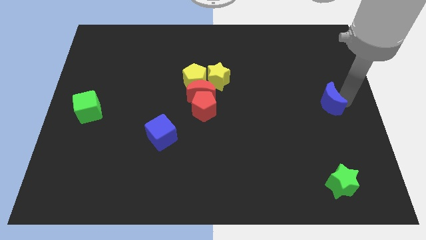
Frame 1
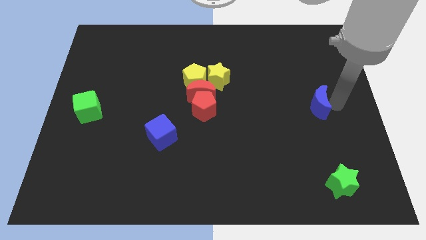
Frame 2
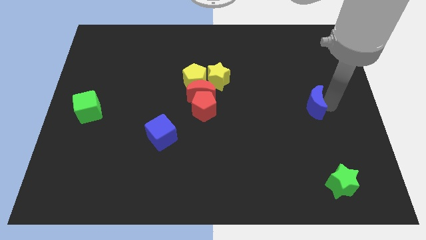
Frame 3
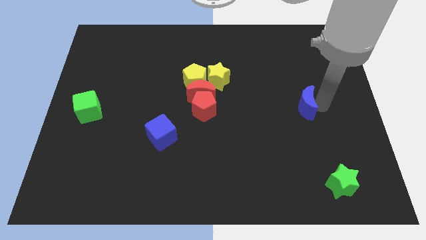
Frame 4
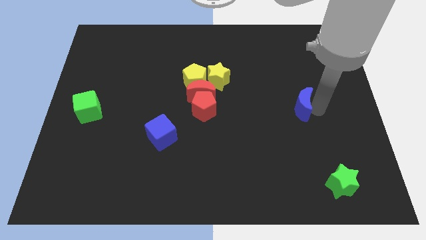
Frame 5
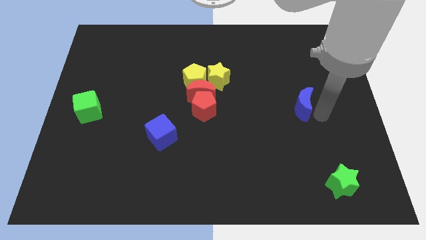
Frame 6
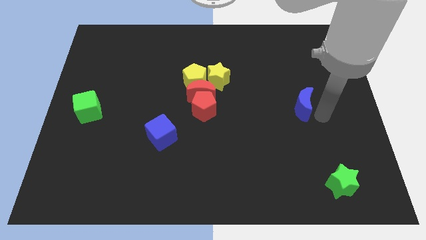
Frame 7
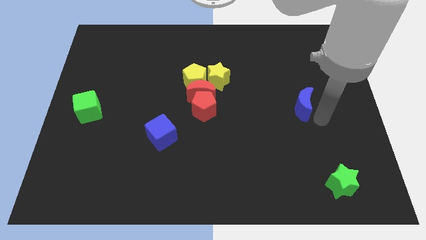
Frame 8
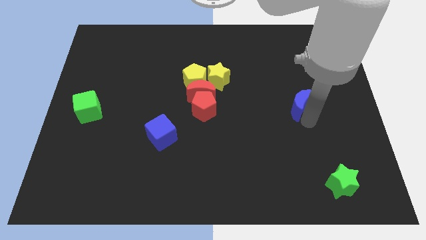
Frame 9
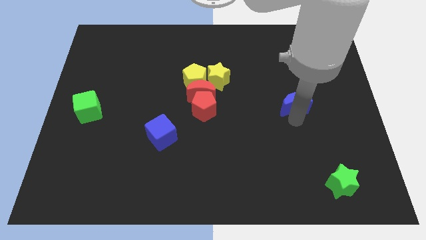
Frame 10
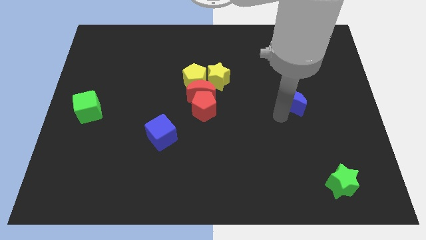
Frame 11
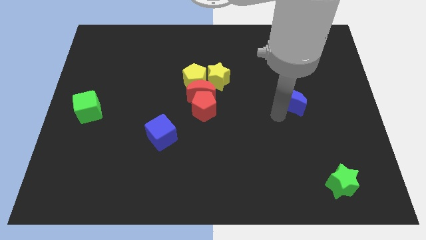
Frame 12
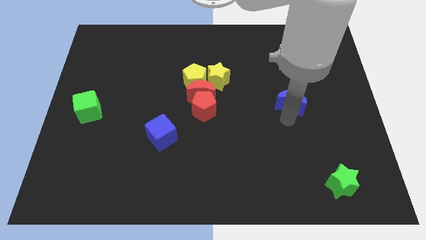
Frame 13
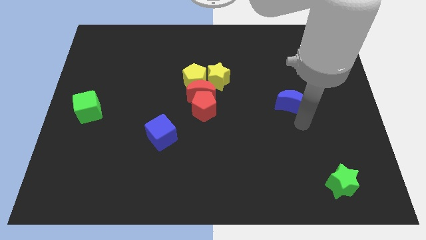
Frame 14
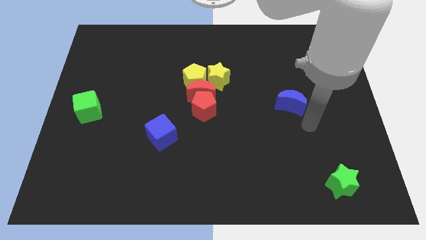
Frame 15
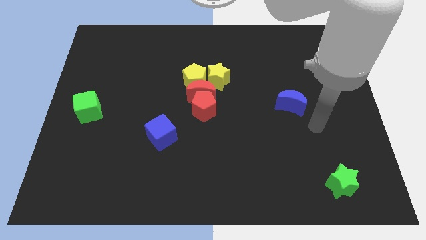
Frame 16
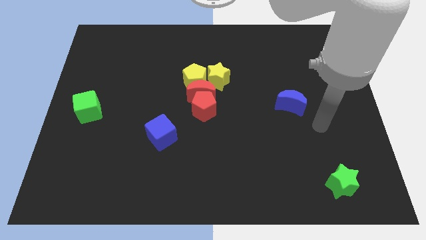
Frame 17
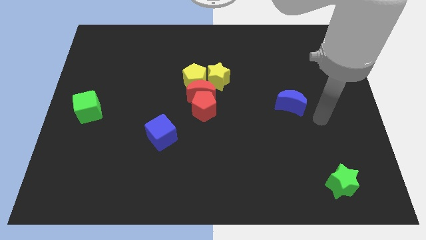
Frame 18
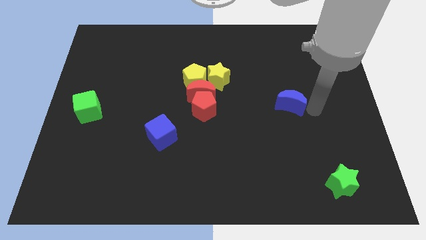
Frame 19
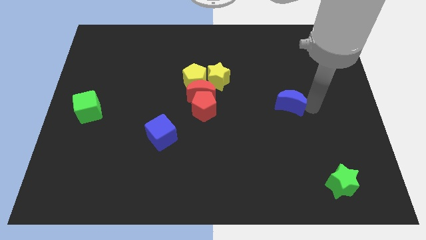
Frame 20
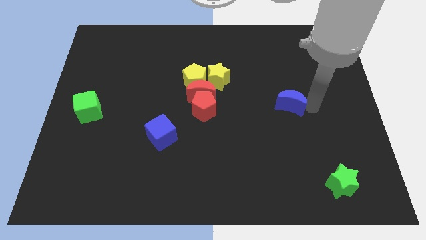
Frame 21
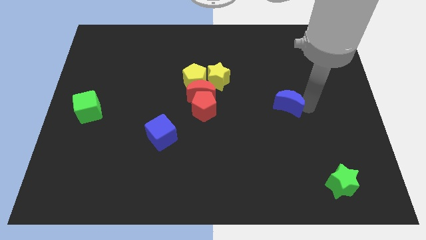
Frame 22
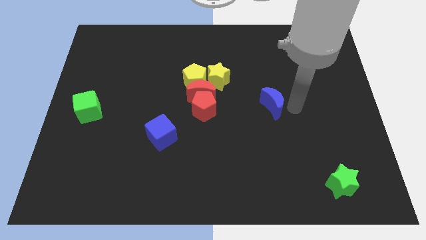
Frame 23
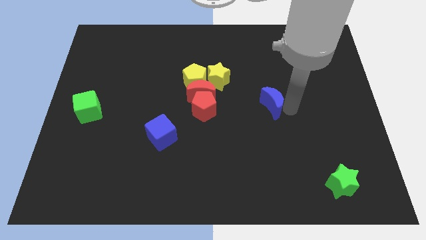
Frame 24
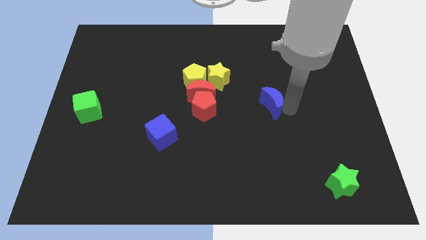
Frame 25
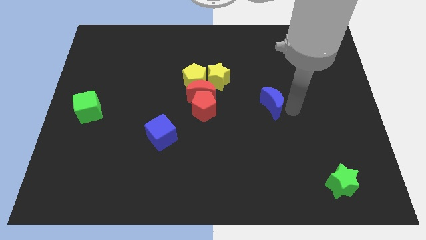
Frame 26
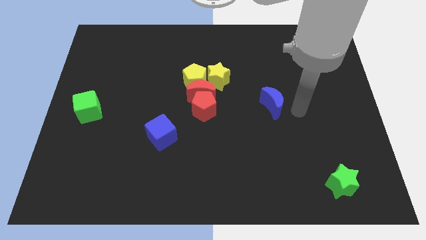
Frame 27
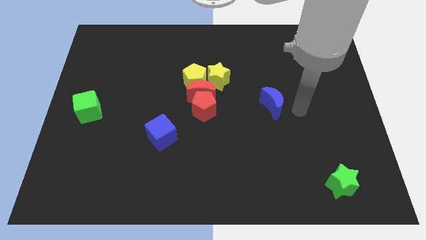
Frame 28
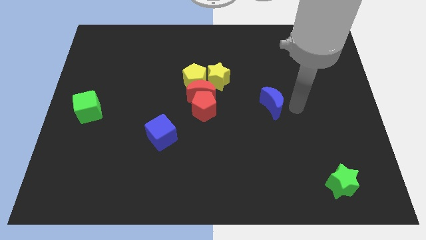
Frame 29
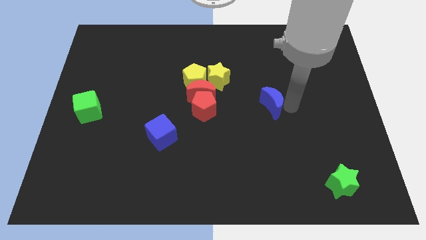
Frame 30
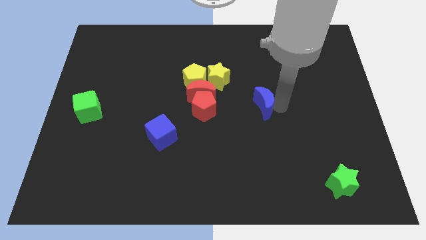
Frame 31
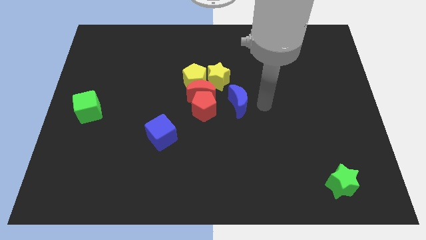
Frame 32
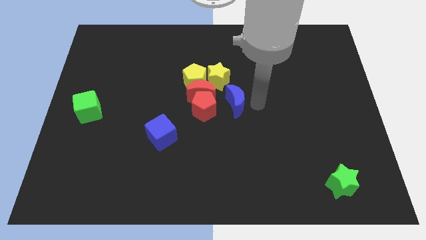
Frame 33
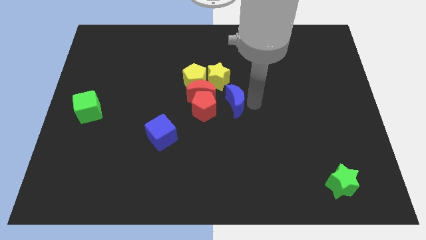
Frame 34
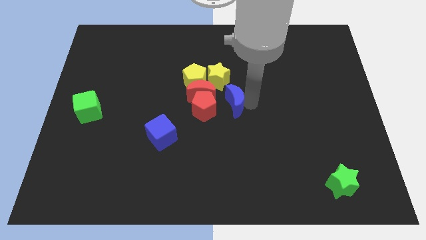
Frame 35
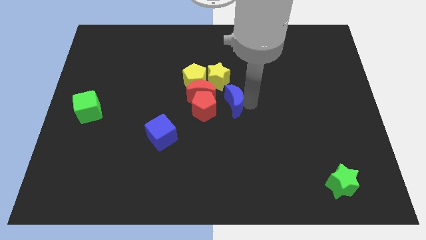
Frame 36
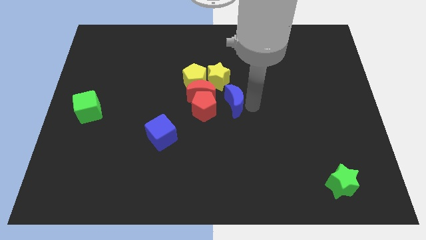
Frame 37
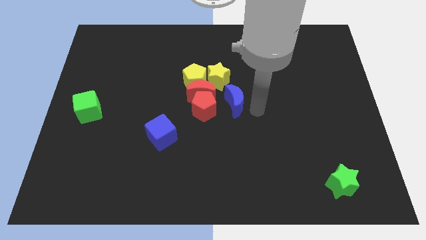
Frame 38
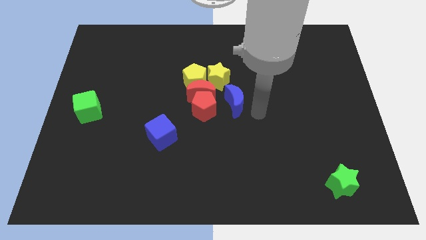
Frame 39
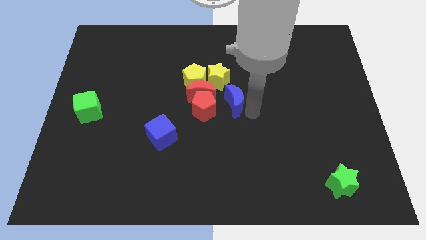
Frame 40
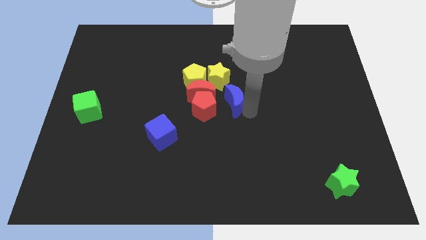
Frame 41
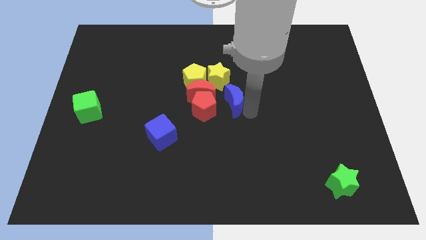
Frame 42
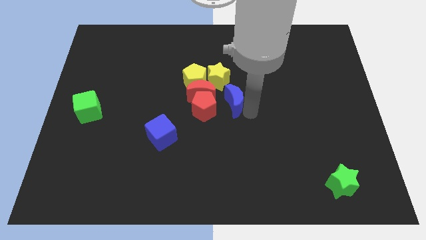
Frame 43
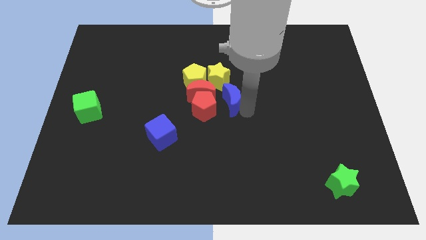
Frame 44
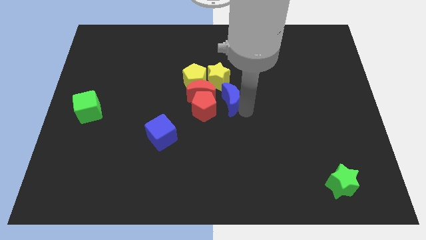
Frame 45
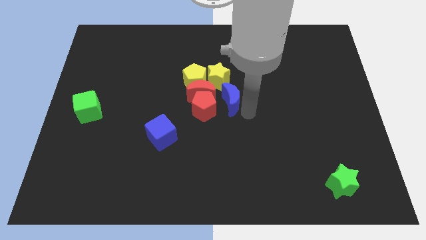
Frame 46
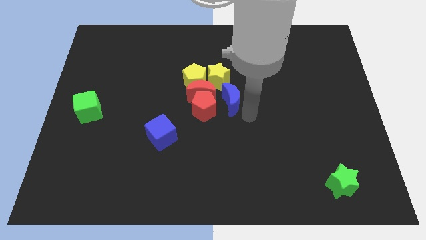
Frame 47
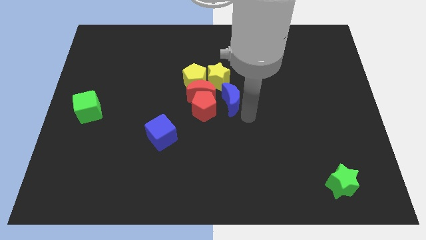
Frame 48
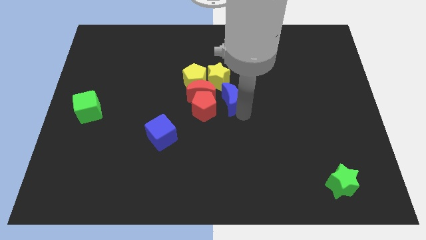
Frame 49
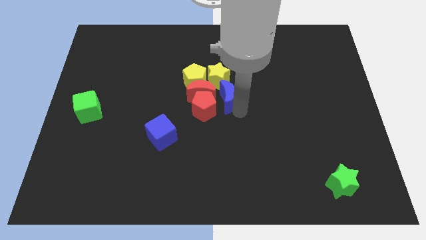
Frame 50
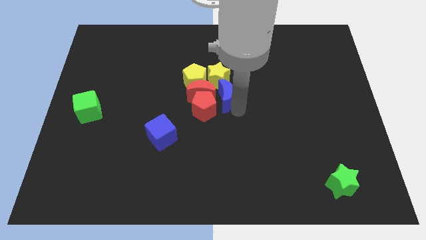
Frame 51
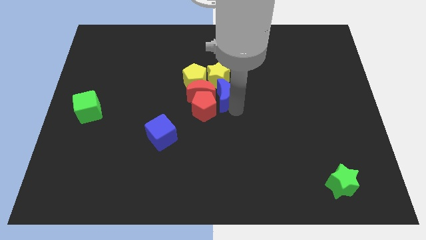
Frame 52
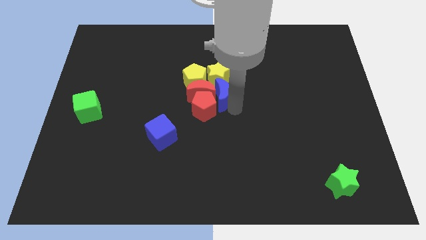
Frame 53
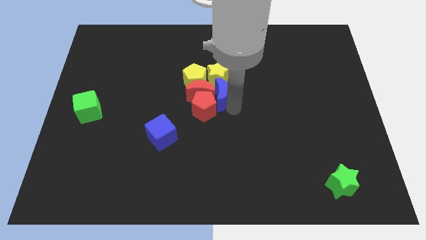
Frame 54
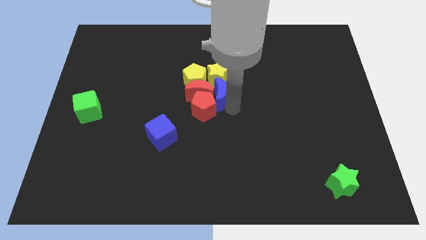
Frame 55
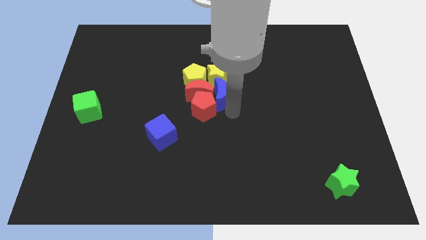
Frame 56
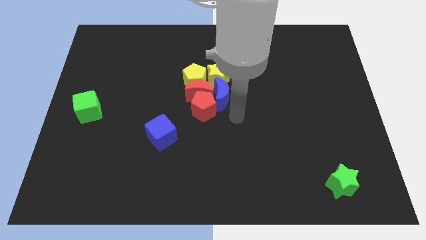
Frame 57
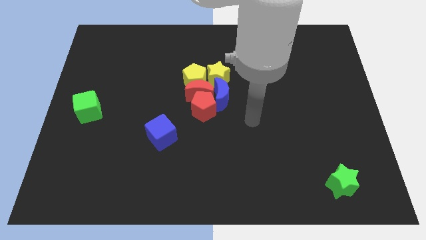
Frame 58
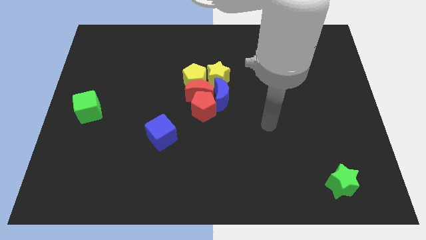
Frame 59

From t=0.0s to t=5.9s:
push the blue moon at the bottom of the yellow star

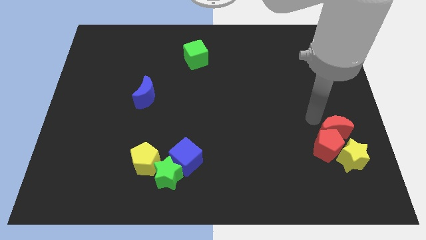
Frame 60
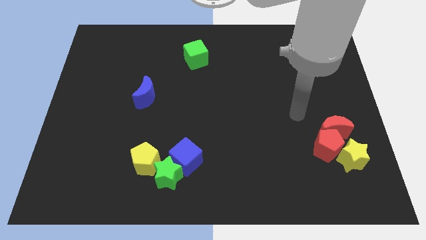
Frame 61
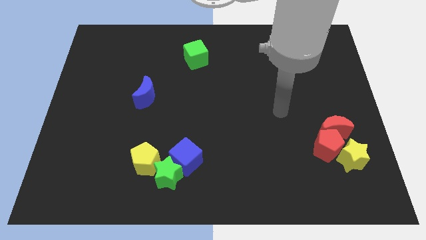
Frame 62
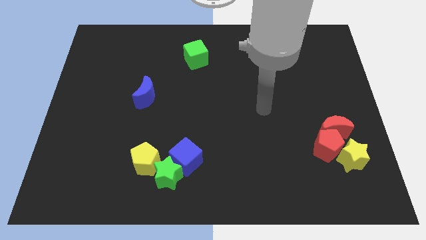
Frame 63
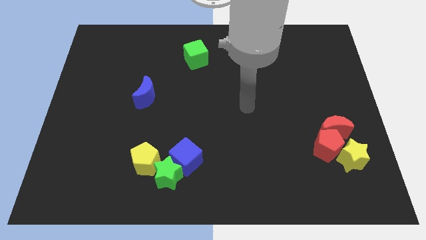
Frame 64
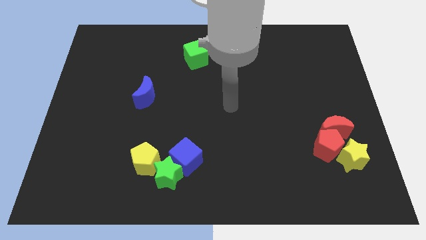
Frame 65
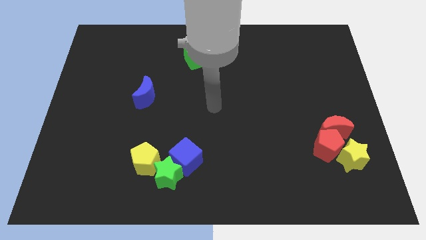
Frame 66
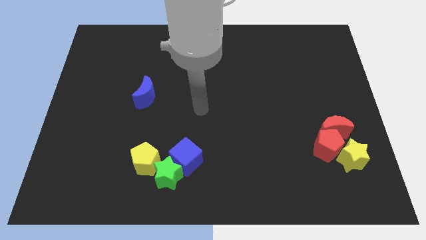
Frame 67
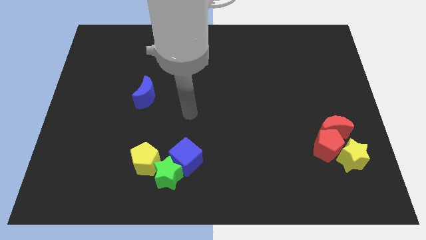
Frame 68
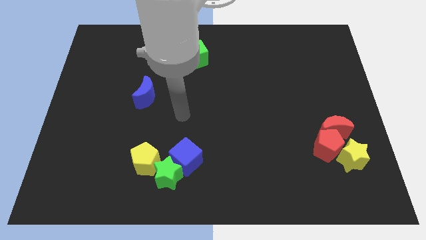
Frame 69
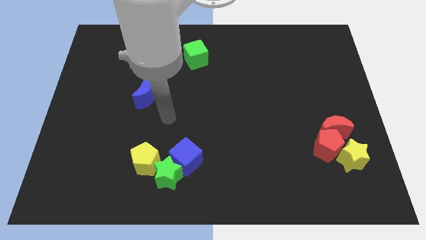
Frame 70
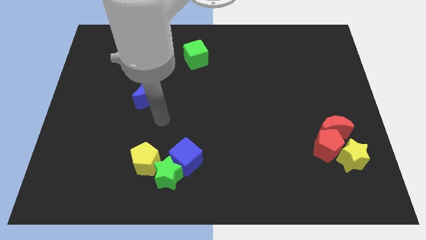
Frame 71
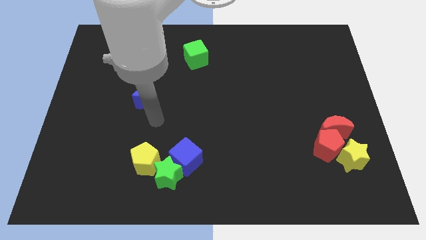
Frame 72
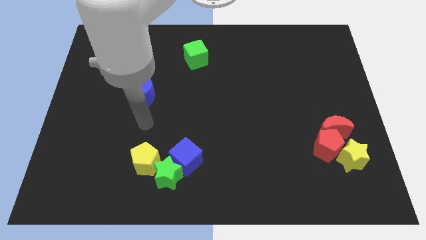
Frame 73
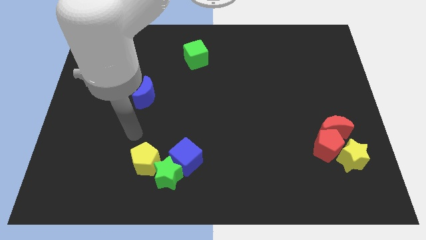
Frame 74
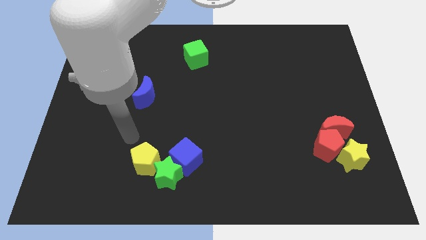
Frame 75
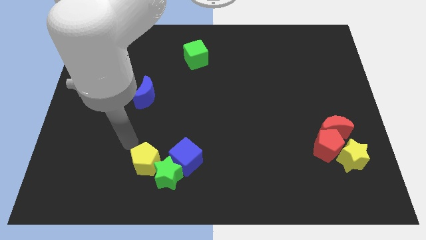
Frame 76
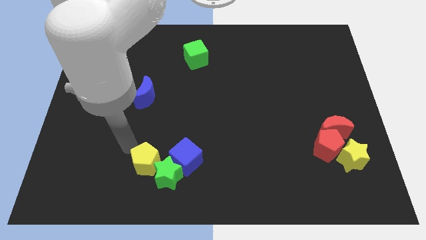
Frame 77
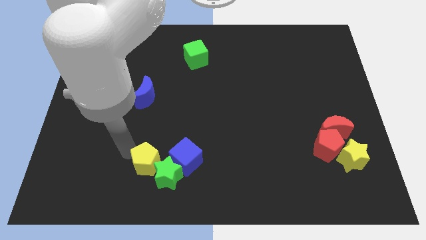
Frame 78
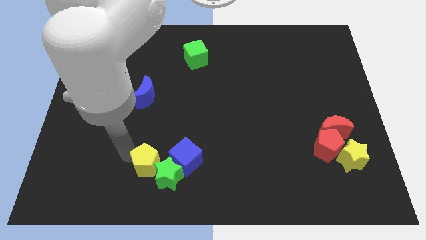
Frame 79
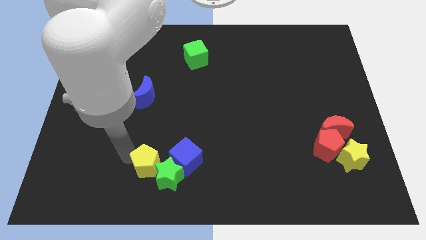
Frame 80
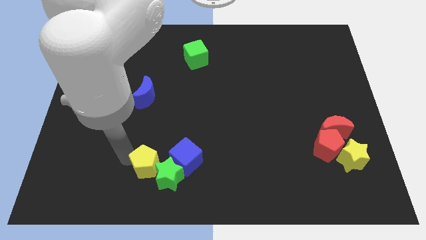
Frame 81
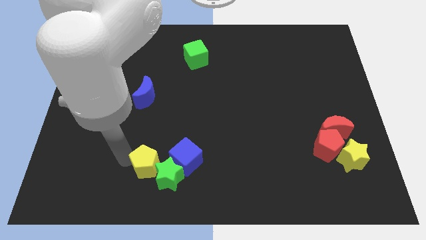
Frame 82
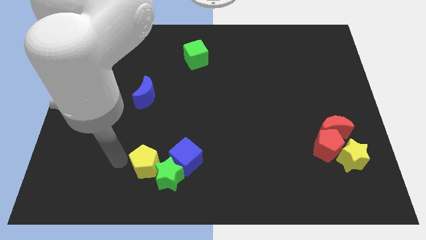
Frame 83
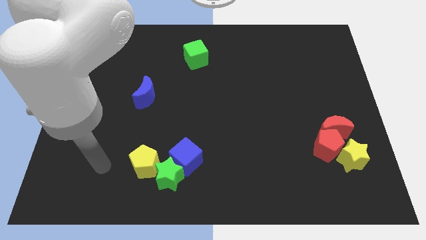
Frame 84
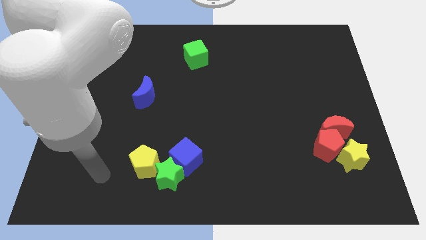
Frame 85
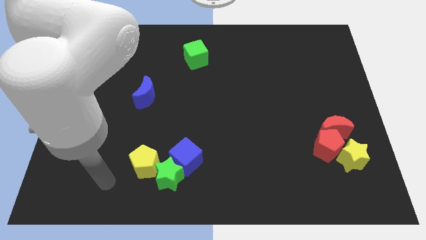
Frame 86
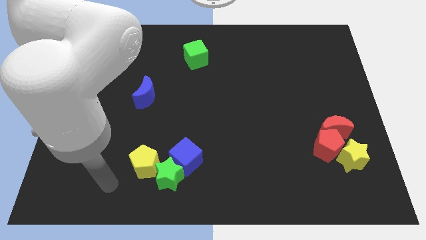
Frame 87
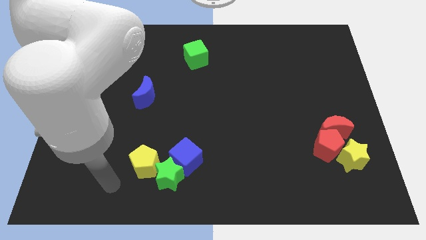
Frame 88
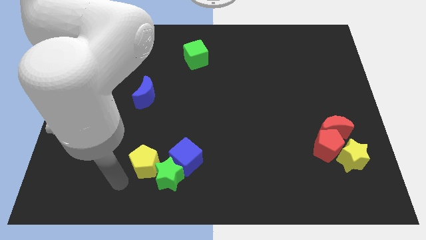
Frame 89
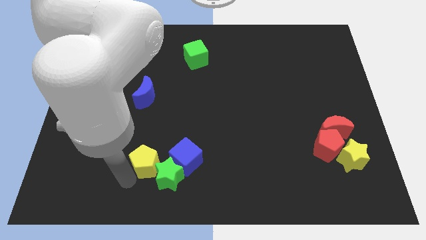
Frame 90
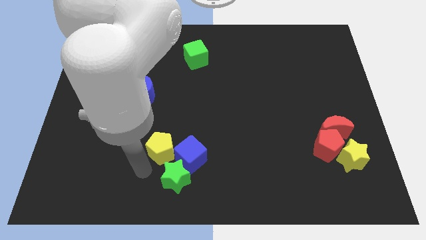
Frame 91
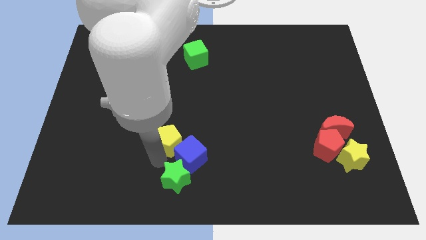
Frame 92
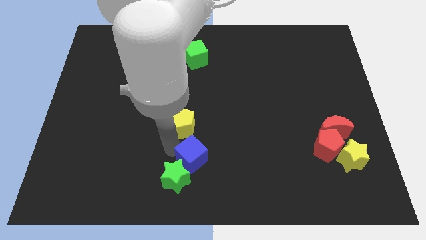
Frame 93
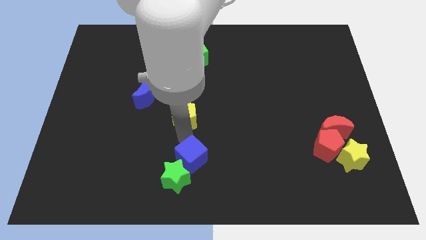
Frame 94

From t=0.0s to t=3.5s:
move the yellow pentagon vertically to the top of the blue cube
